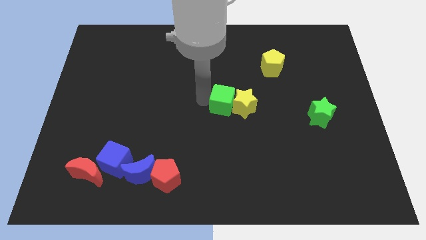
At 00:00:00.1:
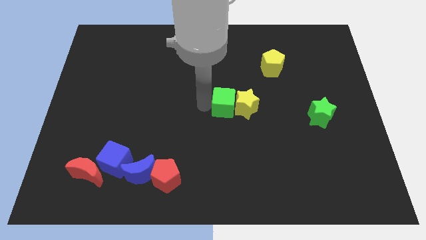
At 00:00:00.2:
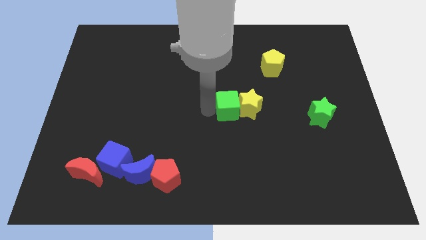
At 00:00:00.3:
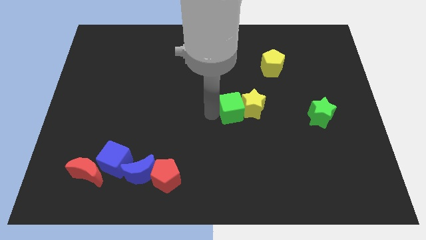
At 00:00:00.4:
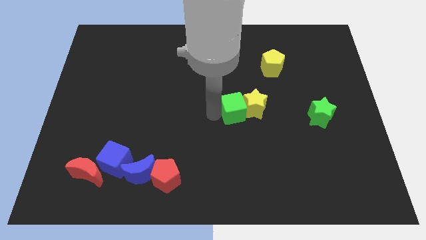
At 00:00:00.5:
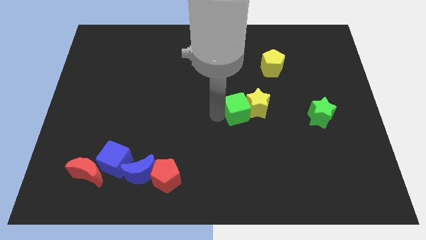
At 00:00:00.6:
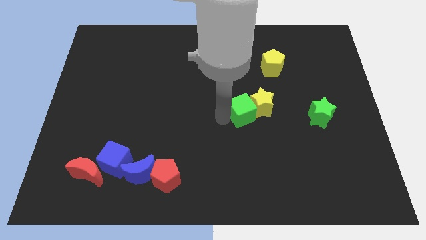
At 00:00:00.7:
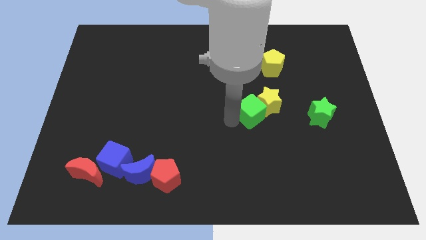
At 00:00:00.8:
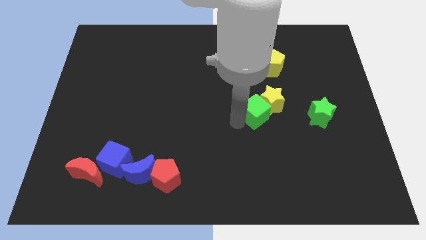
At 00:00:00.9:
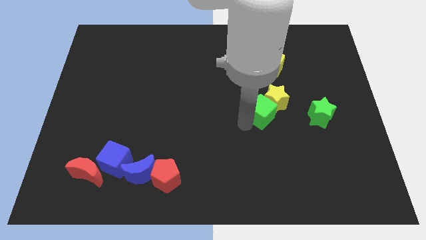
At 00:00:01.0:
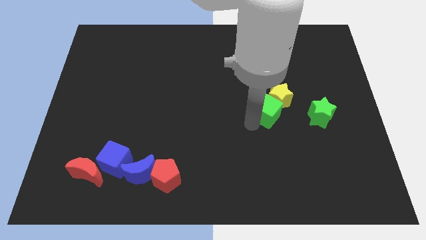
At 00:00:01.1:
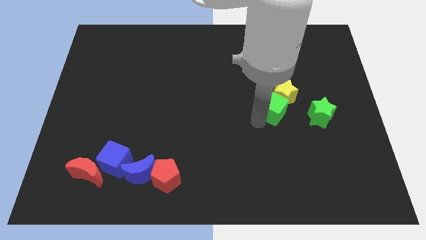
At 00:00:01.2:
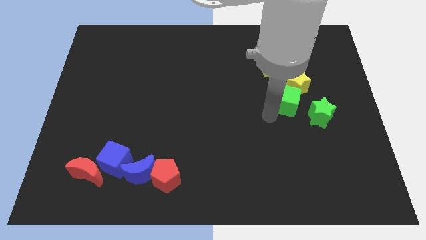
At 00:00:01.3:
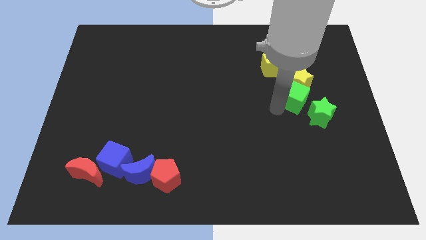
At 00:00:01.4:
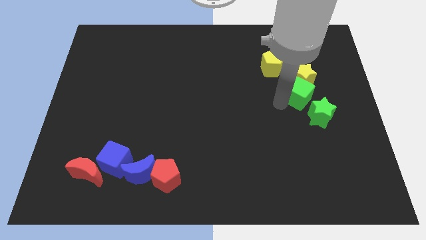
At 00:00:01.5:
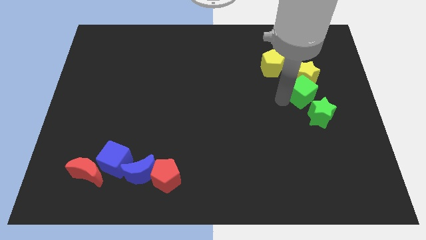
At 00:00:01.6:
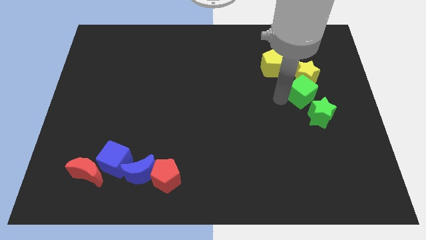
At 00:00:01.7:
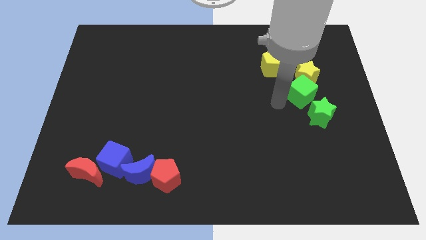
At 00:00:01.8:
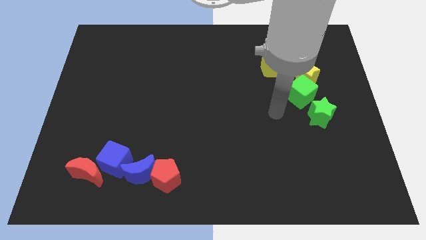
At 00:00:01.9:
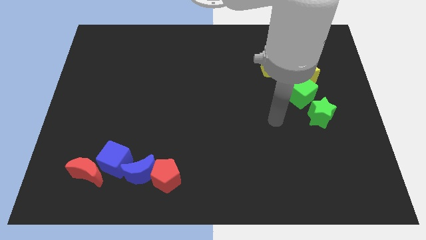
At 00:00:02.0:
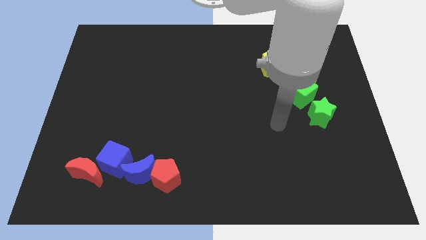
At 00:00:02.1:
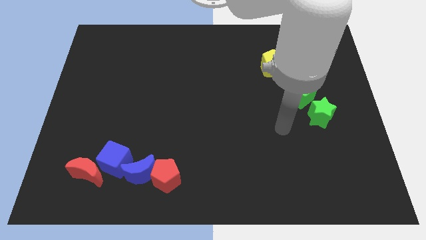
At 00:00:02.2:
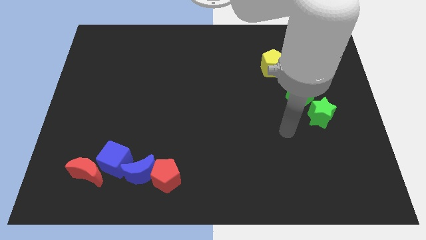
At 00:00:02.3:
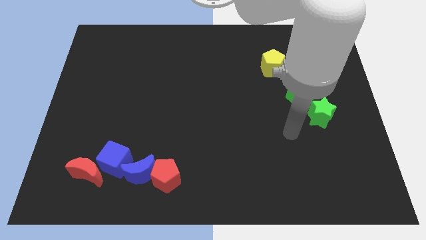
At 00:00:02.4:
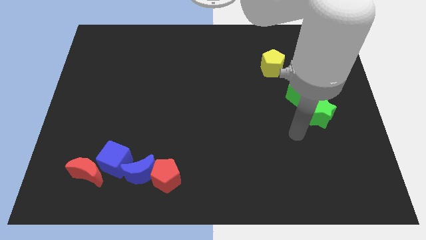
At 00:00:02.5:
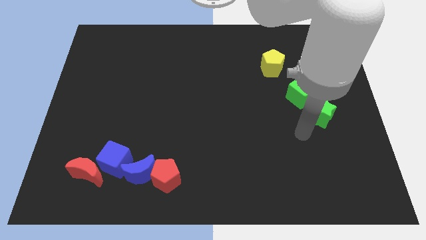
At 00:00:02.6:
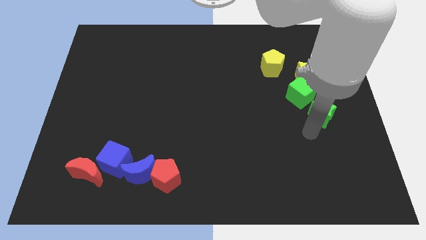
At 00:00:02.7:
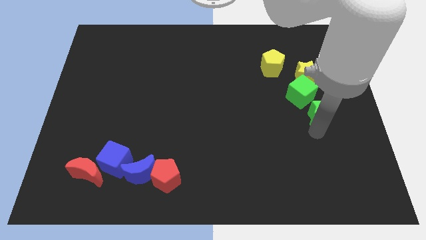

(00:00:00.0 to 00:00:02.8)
drag the green cube to the left diagonal of green star

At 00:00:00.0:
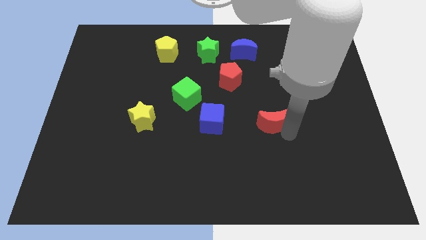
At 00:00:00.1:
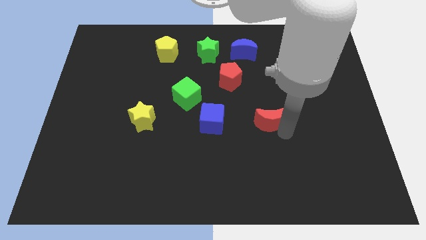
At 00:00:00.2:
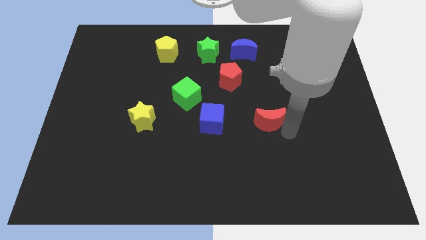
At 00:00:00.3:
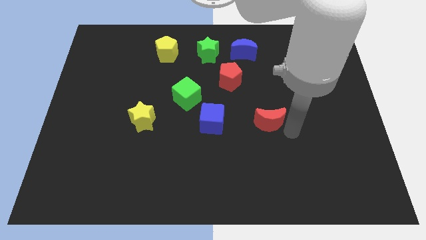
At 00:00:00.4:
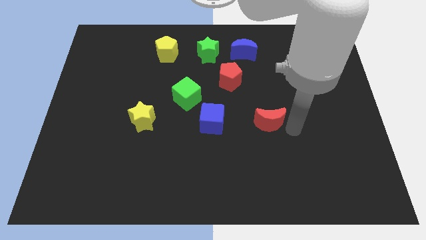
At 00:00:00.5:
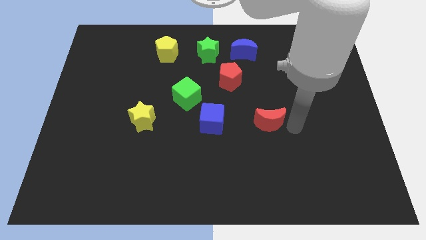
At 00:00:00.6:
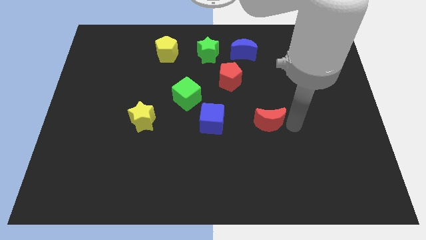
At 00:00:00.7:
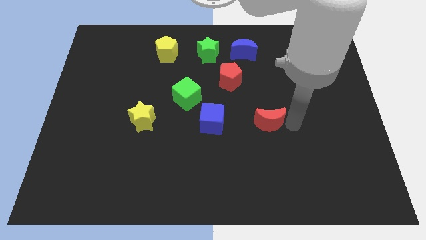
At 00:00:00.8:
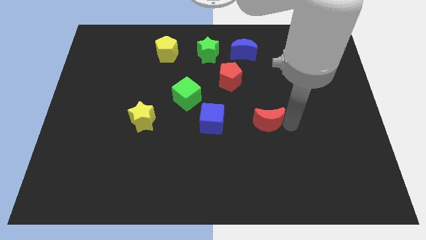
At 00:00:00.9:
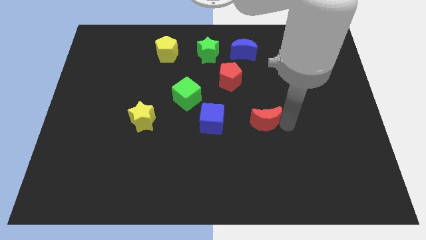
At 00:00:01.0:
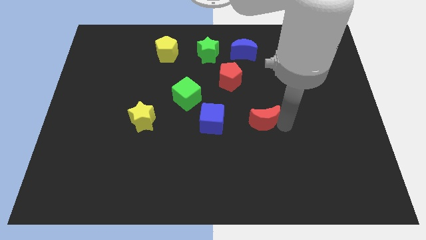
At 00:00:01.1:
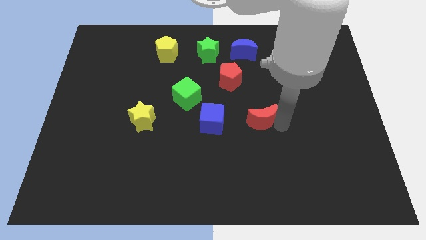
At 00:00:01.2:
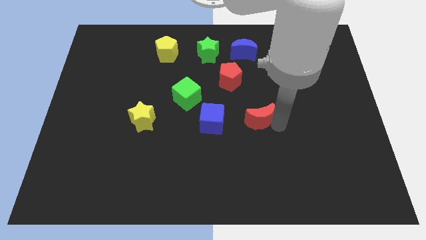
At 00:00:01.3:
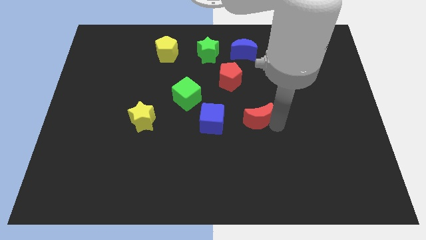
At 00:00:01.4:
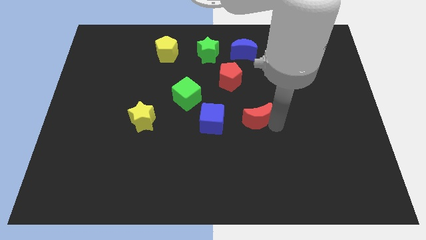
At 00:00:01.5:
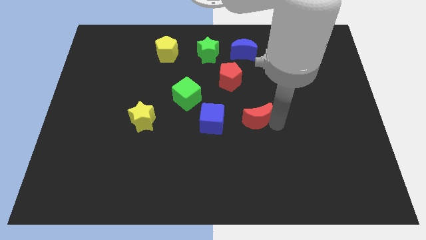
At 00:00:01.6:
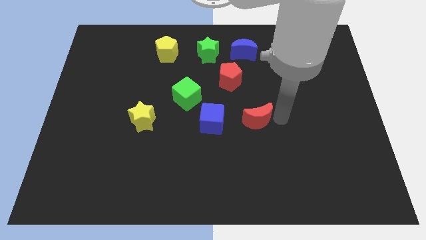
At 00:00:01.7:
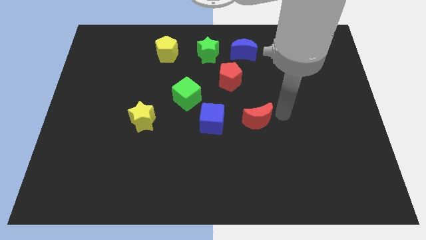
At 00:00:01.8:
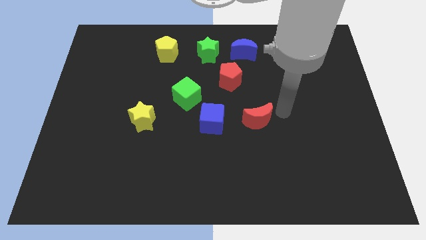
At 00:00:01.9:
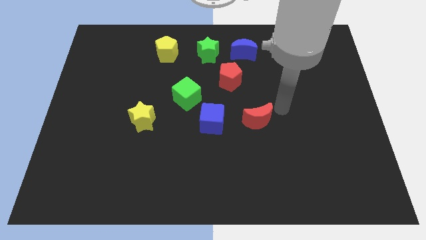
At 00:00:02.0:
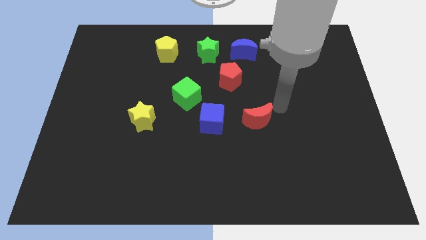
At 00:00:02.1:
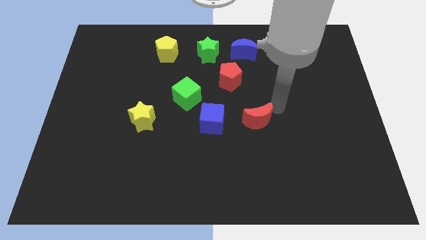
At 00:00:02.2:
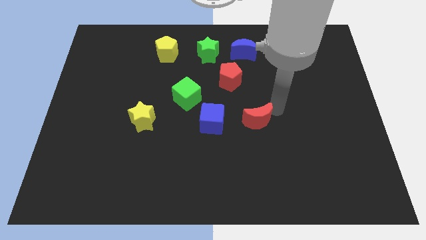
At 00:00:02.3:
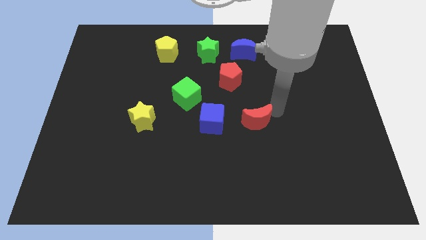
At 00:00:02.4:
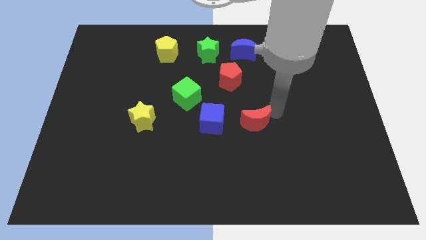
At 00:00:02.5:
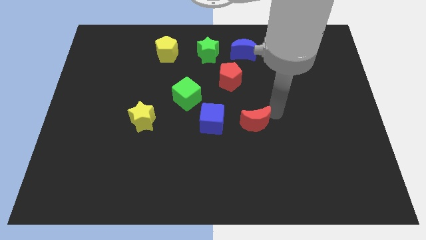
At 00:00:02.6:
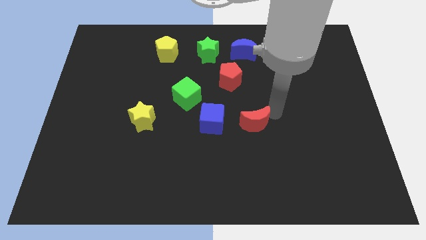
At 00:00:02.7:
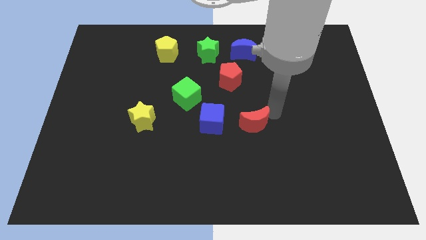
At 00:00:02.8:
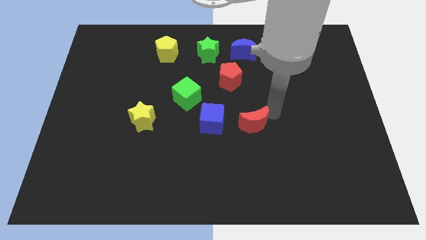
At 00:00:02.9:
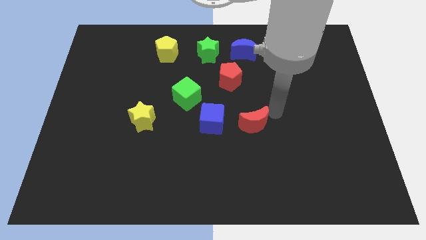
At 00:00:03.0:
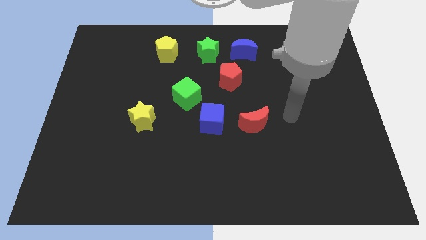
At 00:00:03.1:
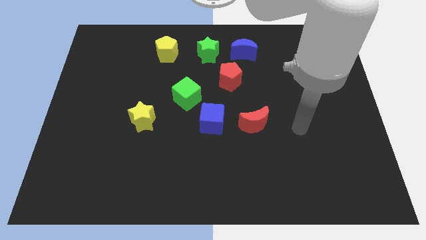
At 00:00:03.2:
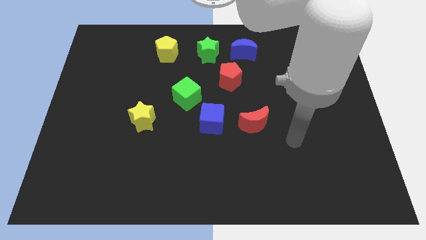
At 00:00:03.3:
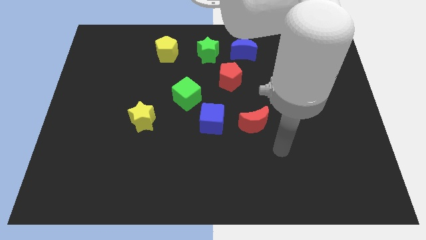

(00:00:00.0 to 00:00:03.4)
move the red crescent towards blue cube

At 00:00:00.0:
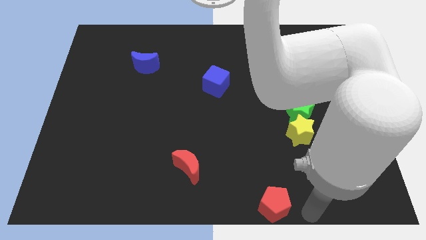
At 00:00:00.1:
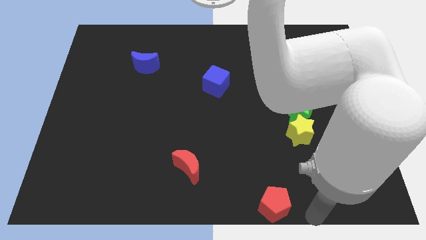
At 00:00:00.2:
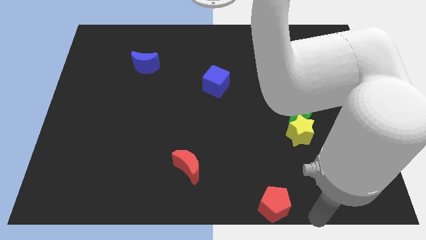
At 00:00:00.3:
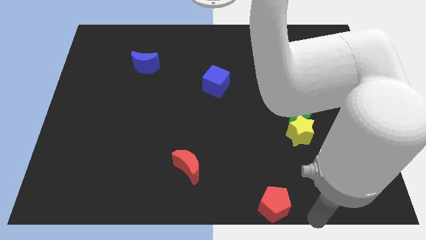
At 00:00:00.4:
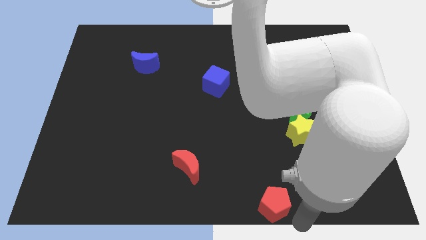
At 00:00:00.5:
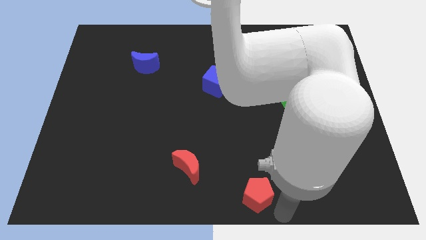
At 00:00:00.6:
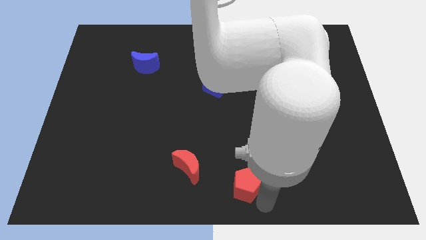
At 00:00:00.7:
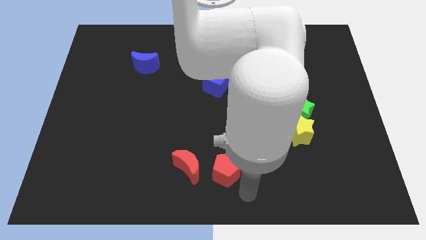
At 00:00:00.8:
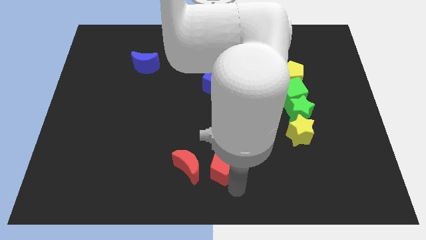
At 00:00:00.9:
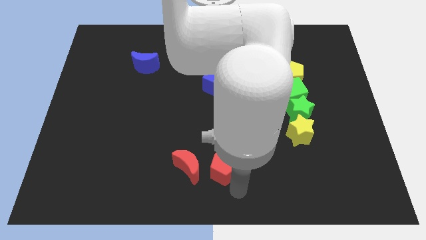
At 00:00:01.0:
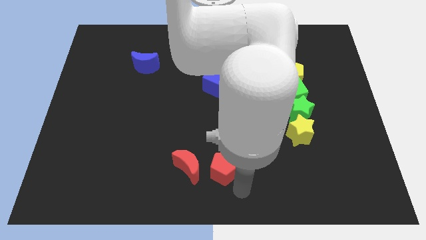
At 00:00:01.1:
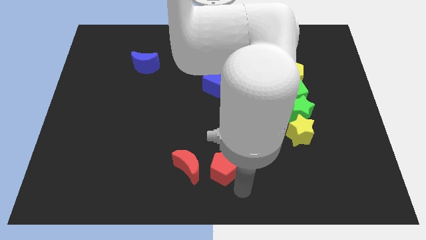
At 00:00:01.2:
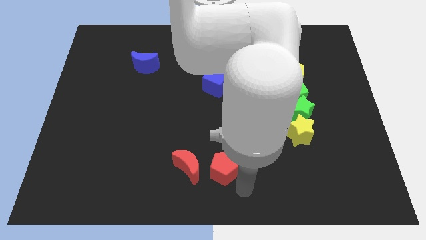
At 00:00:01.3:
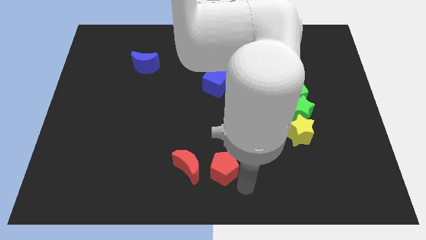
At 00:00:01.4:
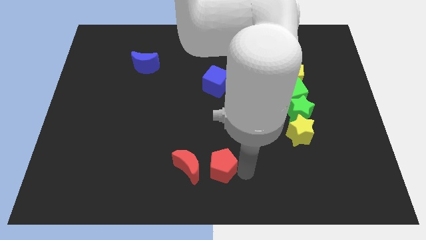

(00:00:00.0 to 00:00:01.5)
place the red pentagon horizontally to the right side of the red crescent

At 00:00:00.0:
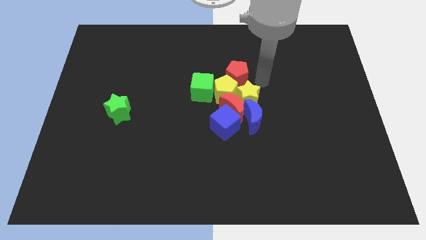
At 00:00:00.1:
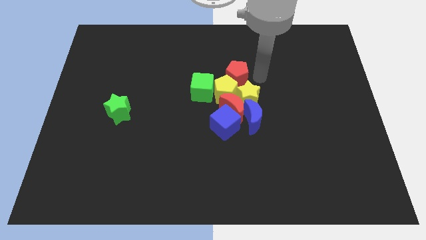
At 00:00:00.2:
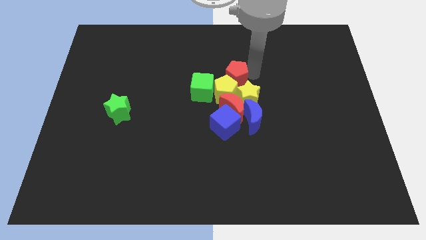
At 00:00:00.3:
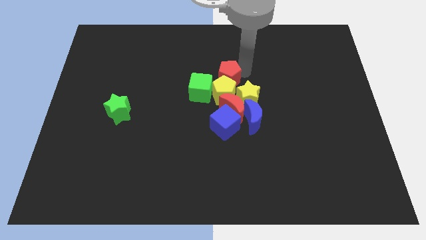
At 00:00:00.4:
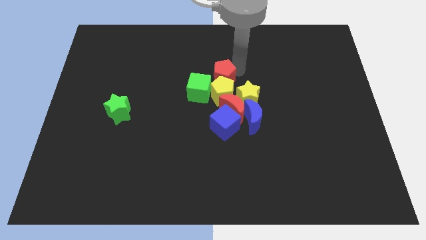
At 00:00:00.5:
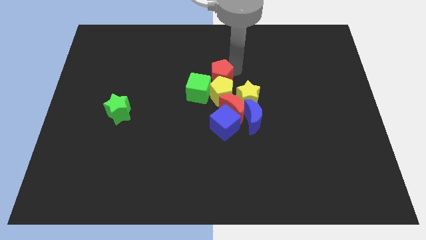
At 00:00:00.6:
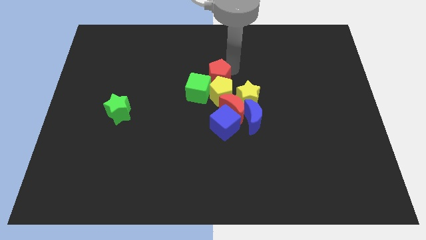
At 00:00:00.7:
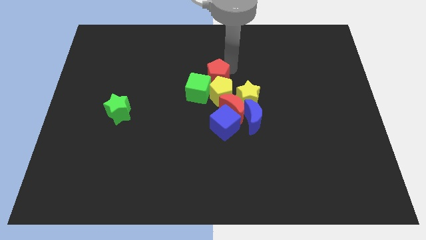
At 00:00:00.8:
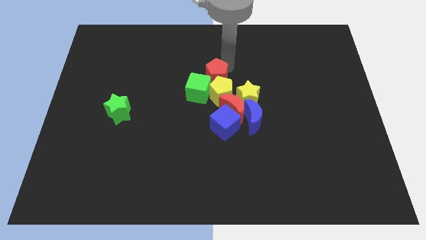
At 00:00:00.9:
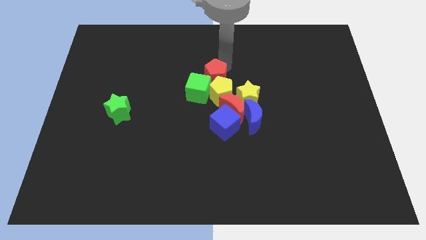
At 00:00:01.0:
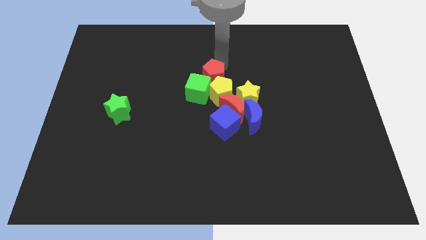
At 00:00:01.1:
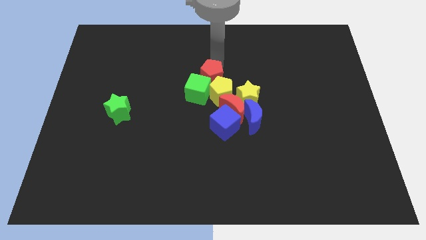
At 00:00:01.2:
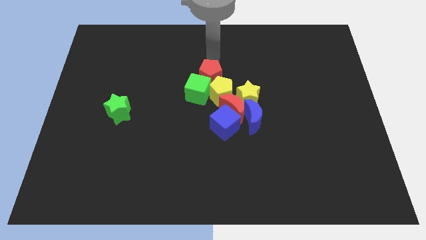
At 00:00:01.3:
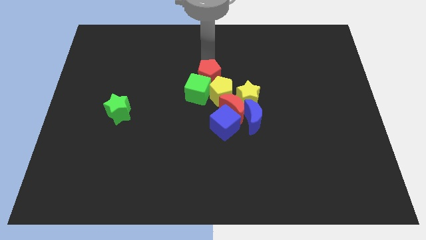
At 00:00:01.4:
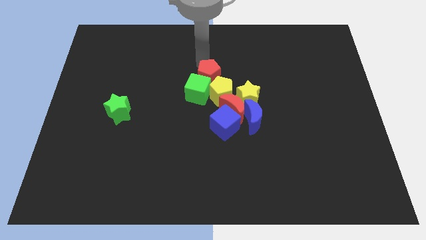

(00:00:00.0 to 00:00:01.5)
push the red pentagon at the top side of the green cube
